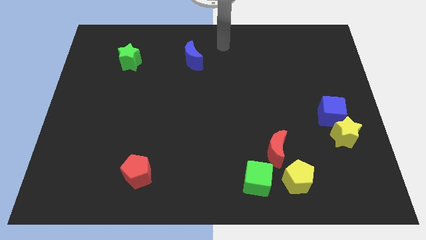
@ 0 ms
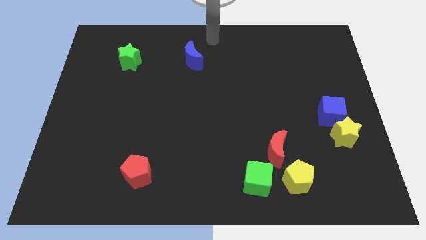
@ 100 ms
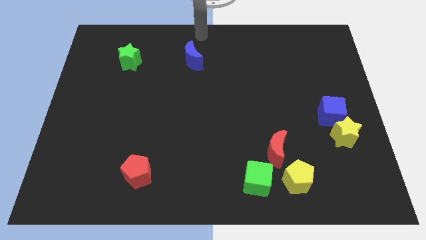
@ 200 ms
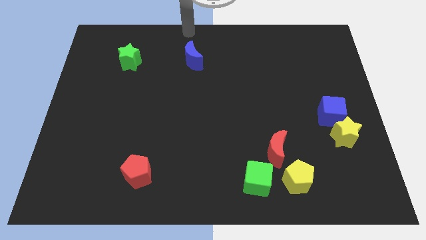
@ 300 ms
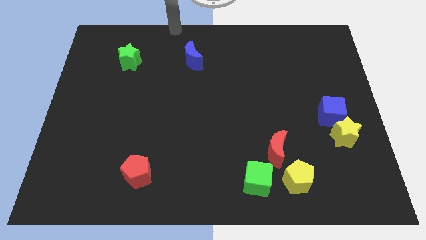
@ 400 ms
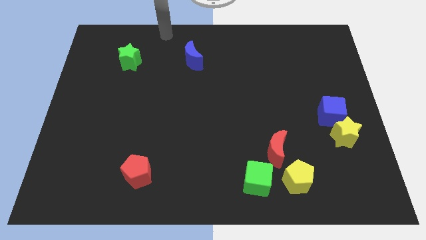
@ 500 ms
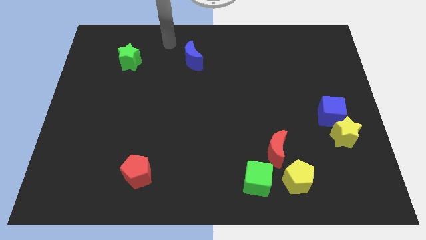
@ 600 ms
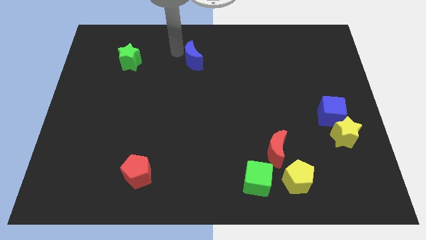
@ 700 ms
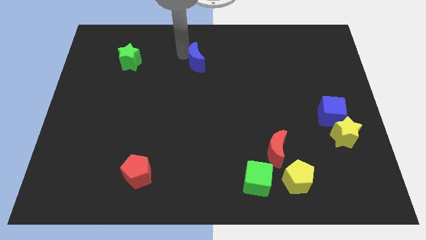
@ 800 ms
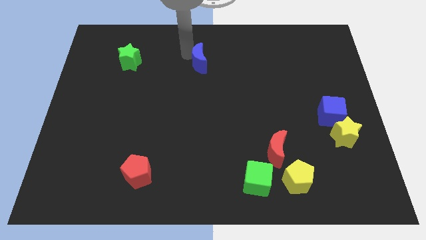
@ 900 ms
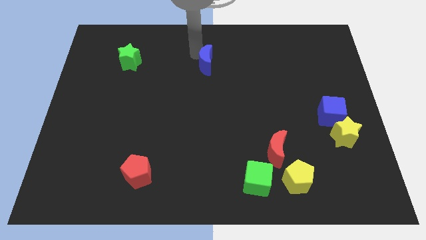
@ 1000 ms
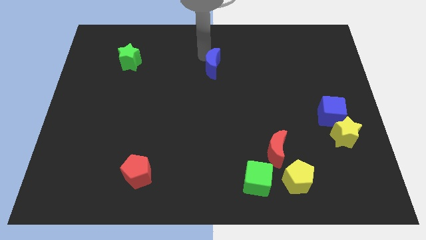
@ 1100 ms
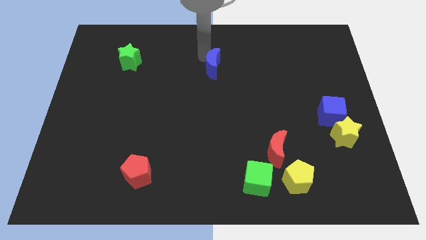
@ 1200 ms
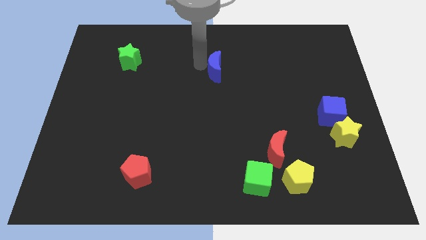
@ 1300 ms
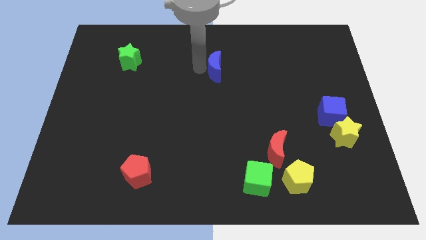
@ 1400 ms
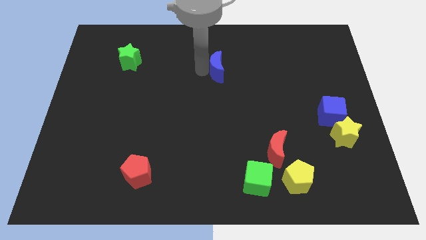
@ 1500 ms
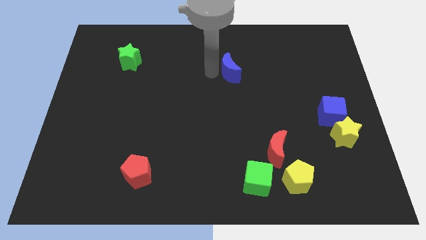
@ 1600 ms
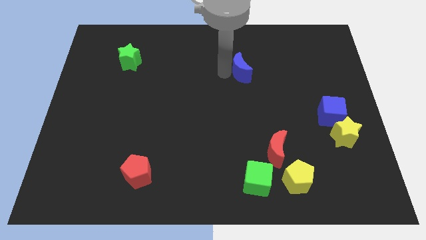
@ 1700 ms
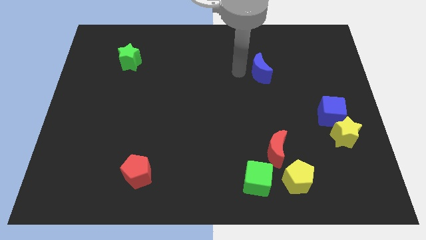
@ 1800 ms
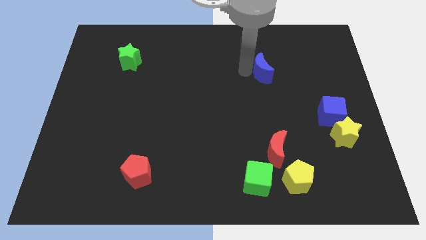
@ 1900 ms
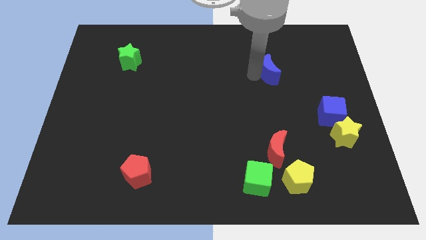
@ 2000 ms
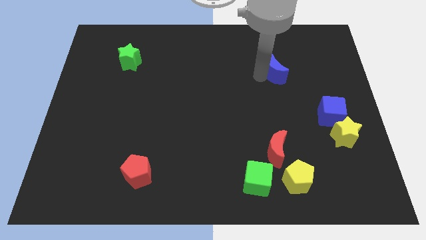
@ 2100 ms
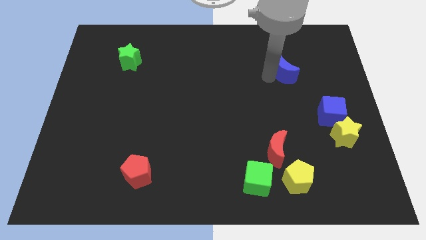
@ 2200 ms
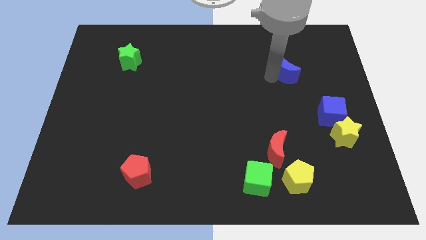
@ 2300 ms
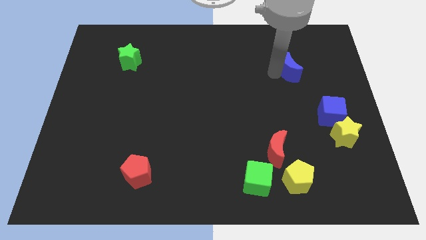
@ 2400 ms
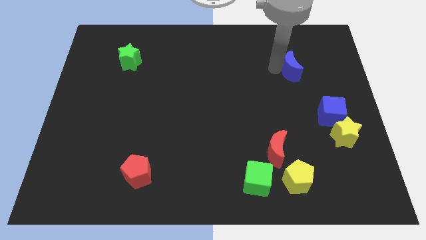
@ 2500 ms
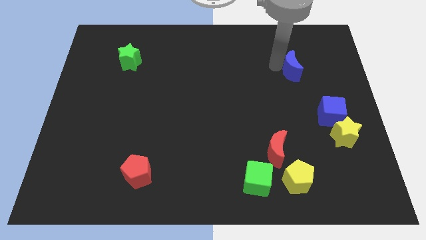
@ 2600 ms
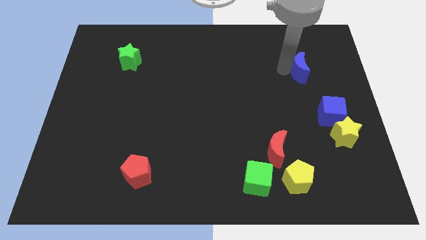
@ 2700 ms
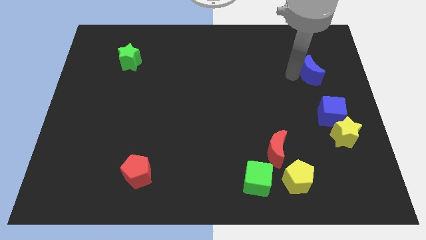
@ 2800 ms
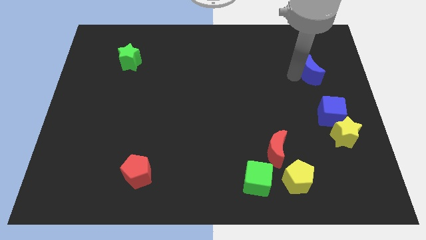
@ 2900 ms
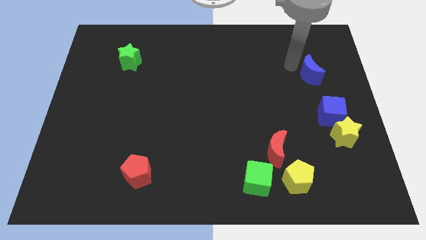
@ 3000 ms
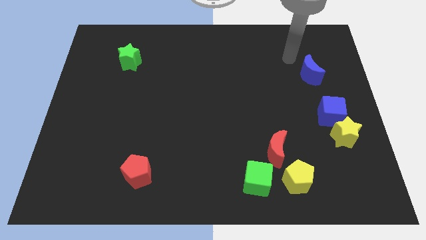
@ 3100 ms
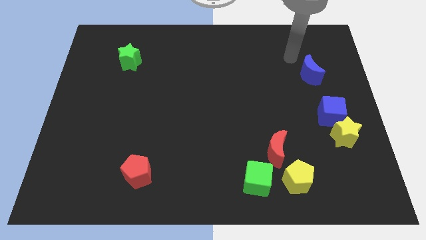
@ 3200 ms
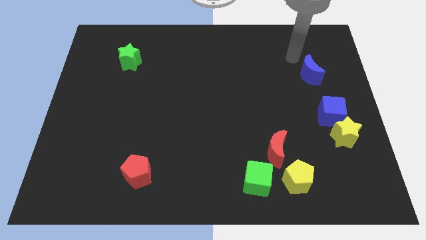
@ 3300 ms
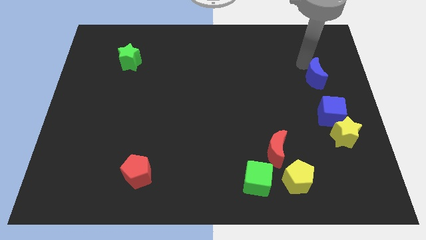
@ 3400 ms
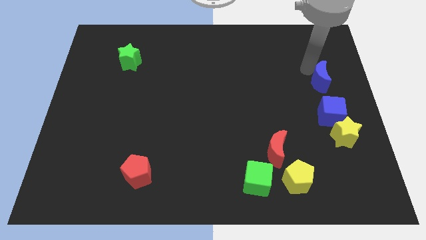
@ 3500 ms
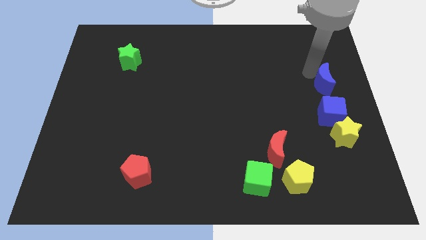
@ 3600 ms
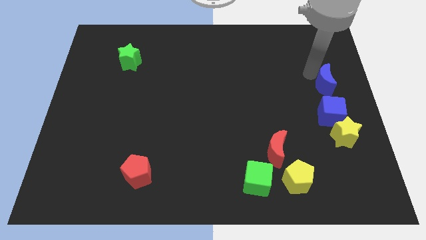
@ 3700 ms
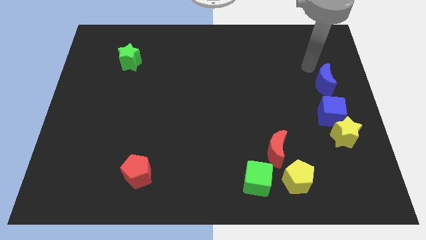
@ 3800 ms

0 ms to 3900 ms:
place the blue moon above the blue cube

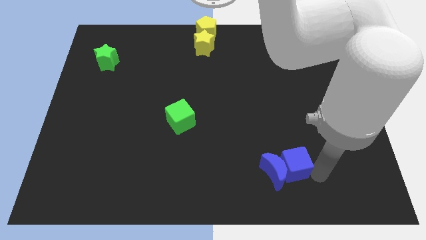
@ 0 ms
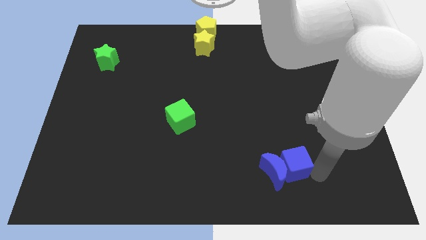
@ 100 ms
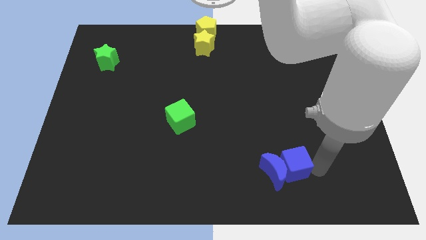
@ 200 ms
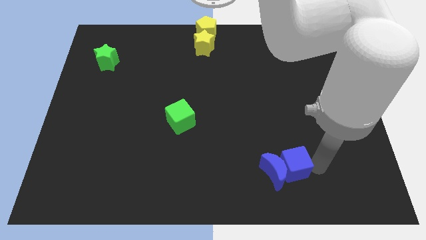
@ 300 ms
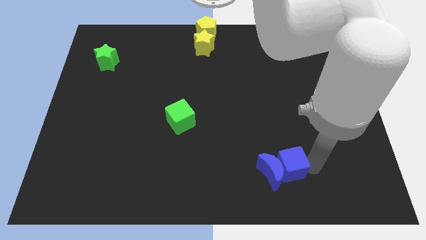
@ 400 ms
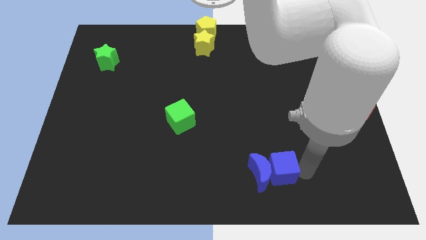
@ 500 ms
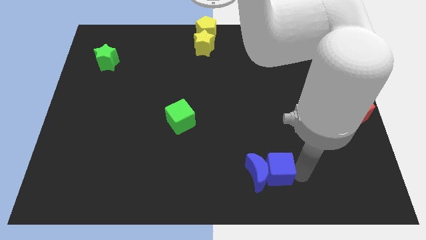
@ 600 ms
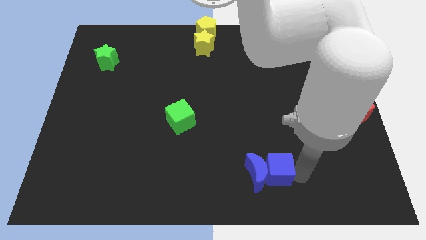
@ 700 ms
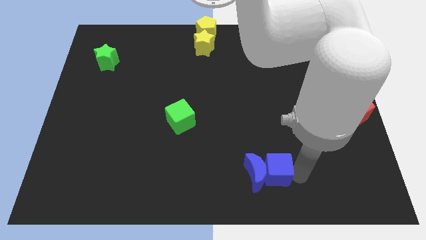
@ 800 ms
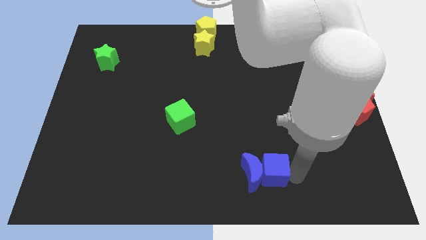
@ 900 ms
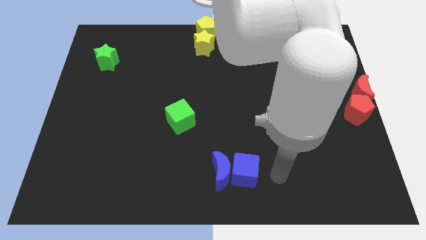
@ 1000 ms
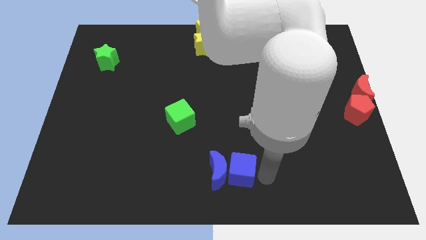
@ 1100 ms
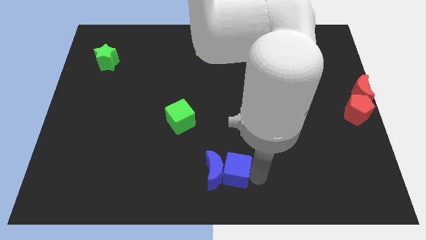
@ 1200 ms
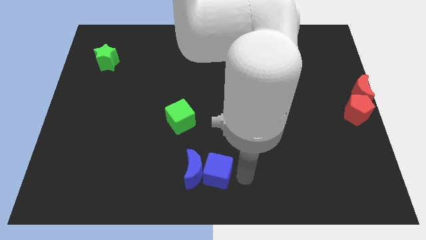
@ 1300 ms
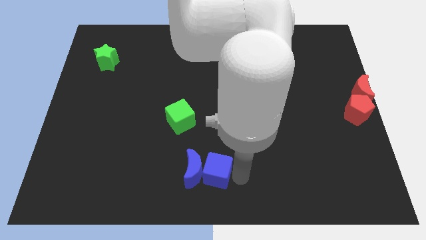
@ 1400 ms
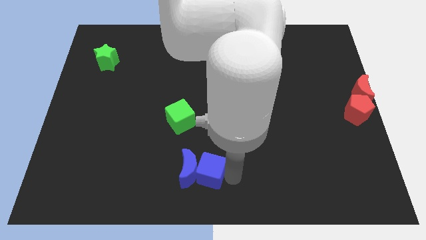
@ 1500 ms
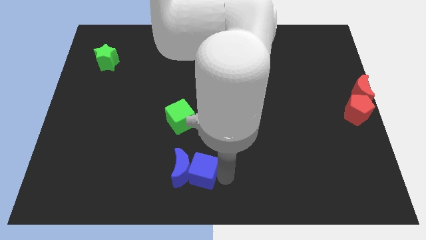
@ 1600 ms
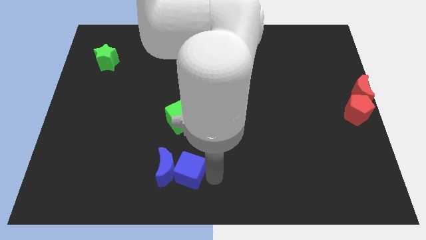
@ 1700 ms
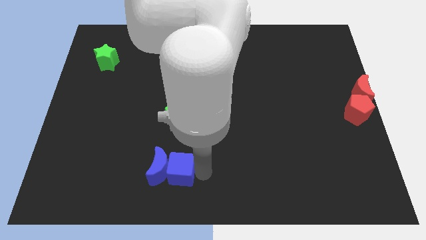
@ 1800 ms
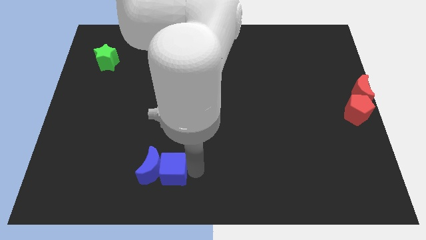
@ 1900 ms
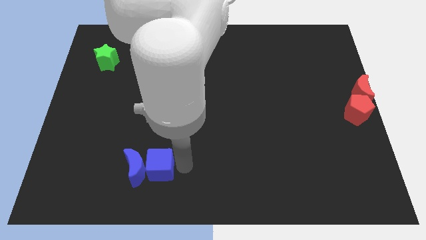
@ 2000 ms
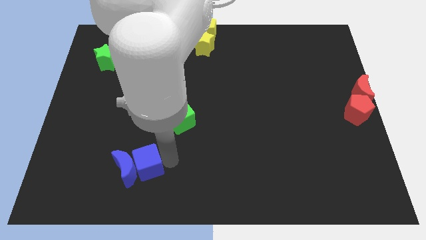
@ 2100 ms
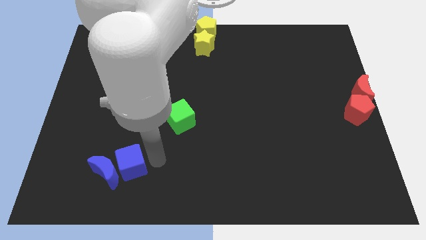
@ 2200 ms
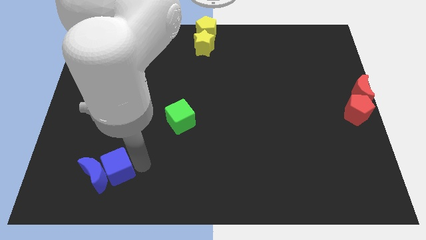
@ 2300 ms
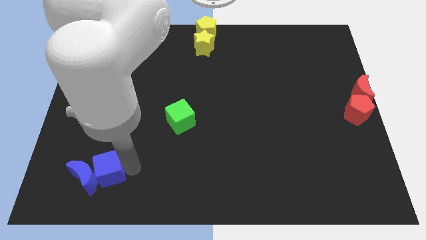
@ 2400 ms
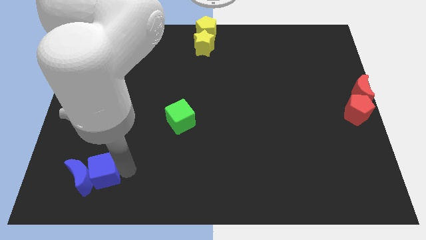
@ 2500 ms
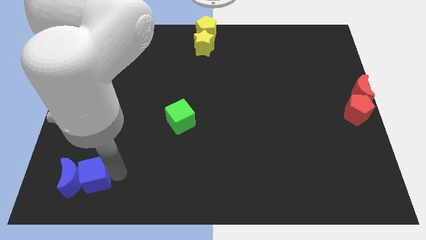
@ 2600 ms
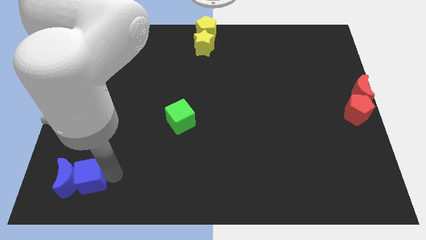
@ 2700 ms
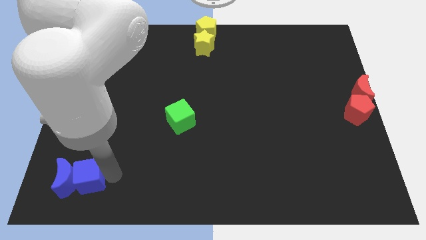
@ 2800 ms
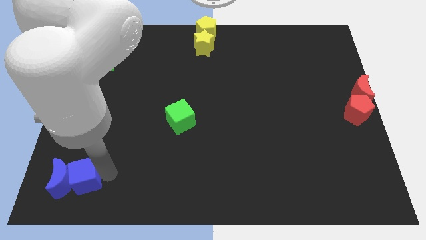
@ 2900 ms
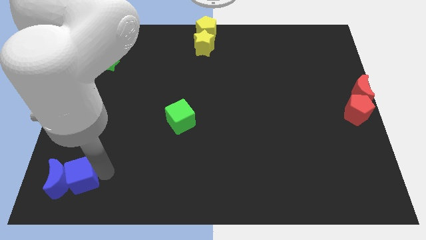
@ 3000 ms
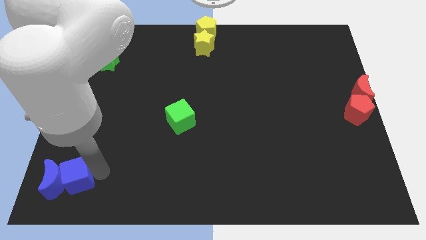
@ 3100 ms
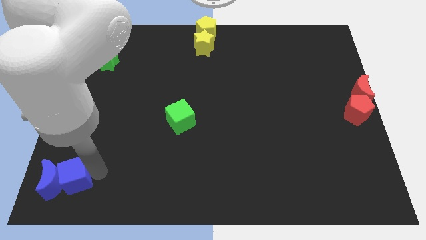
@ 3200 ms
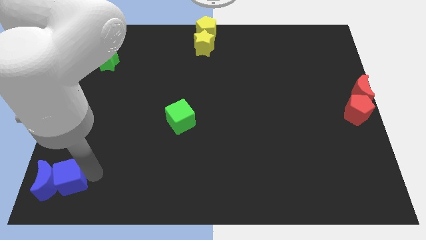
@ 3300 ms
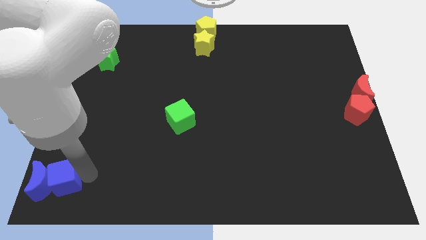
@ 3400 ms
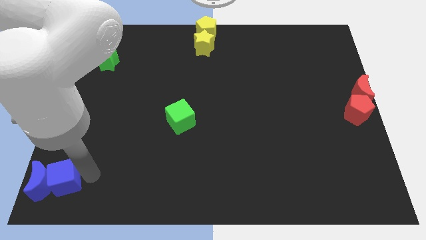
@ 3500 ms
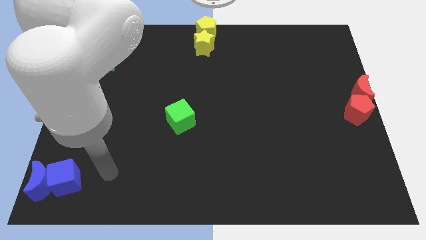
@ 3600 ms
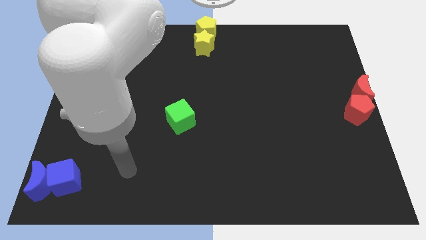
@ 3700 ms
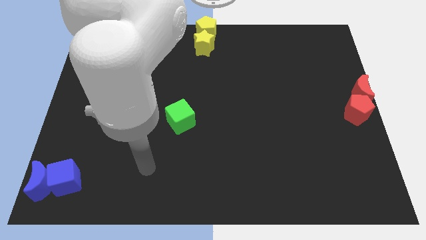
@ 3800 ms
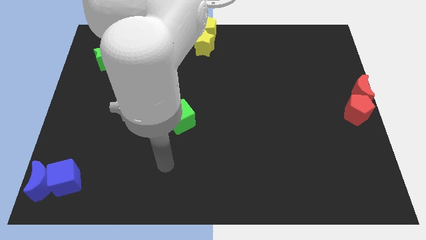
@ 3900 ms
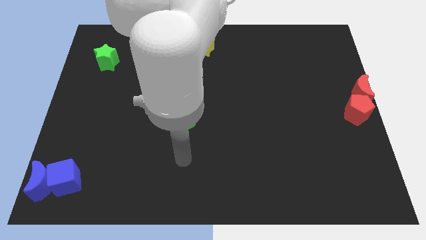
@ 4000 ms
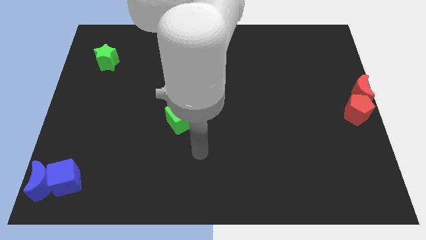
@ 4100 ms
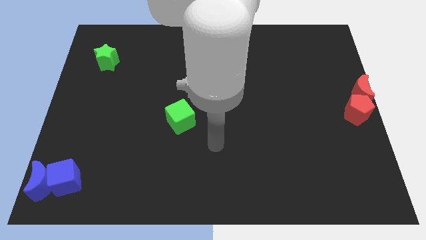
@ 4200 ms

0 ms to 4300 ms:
move the blue blocks to the bottom left corner

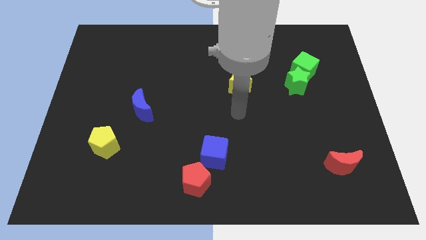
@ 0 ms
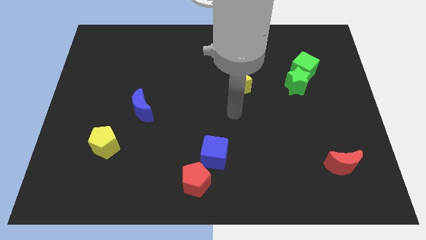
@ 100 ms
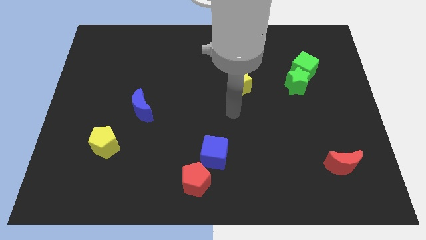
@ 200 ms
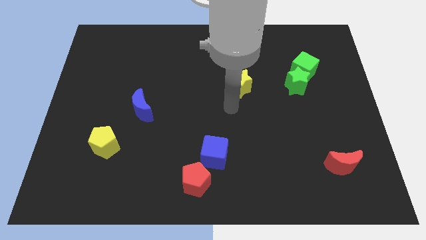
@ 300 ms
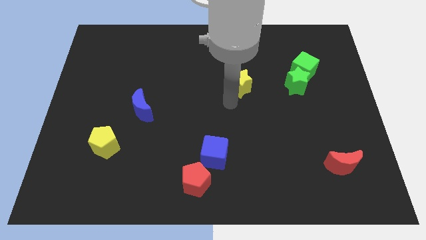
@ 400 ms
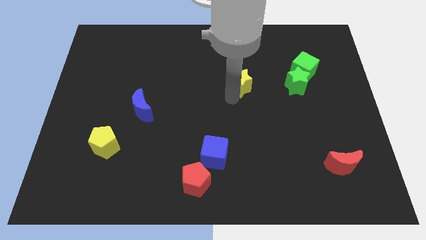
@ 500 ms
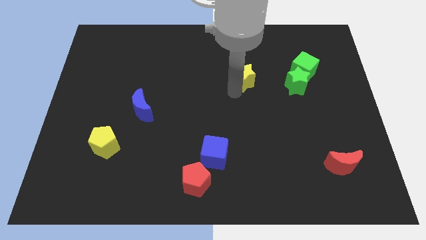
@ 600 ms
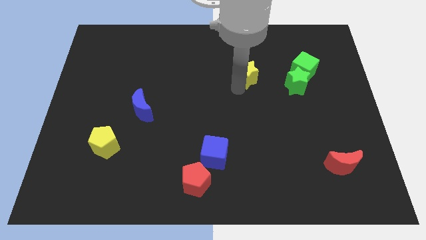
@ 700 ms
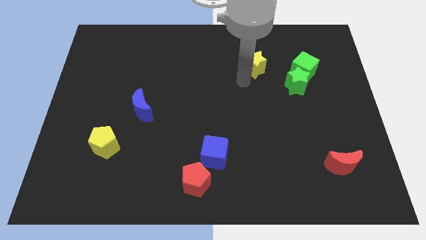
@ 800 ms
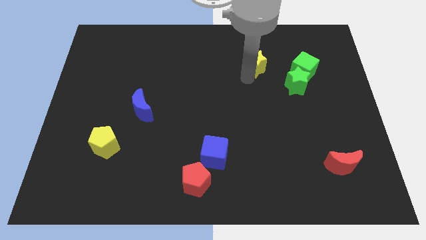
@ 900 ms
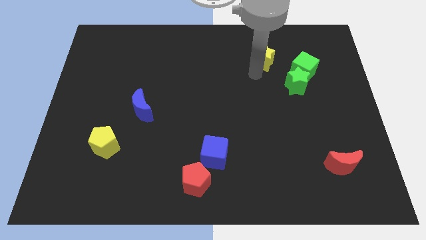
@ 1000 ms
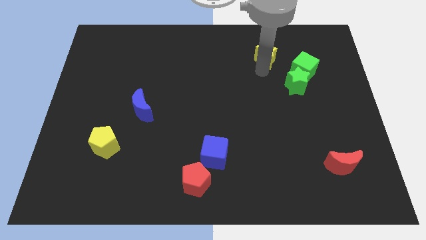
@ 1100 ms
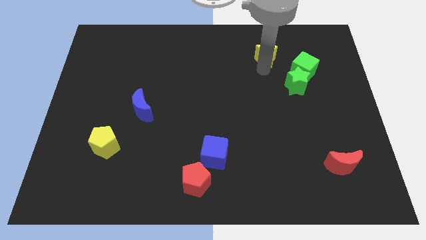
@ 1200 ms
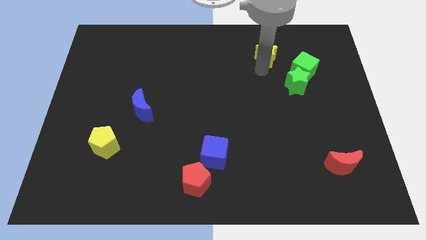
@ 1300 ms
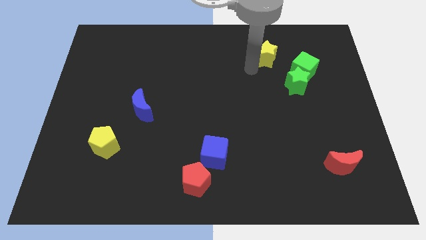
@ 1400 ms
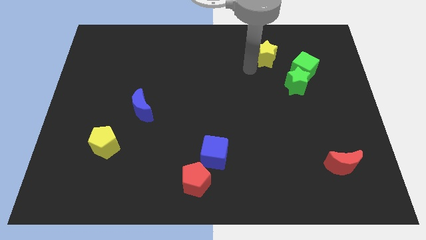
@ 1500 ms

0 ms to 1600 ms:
push the yellow star slightly to the top
